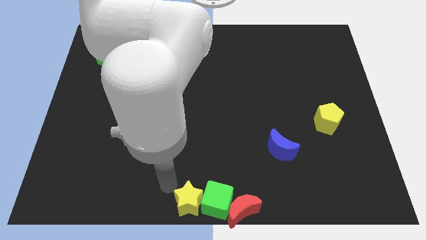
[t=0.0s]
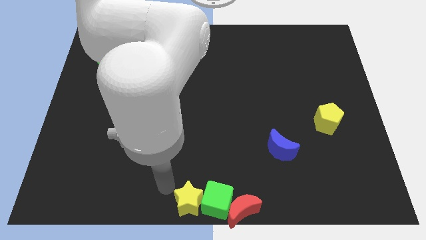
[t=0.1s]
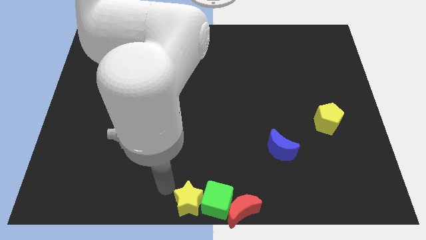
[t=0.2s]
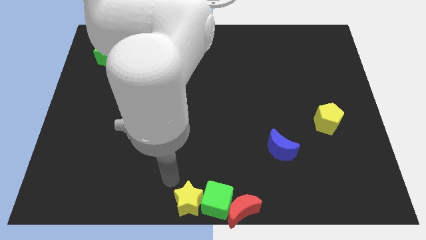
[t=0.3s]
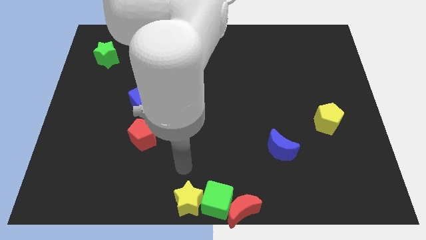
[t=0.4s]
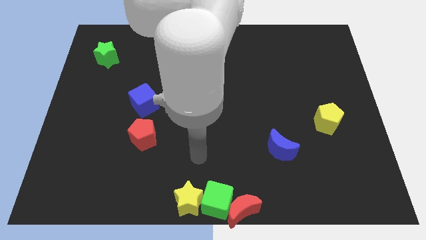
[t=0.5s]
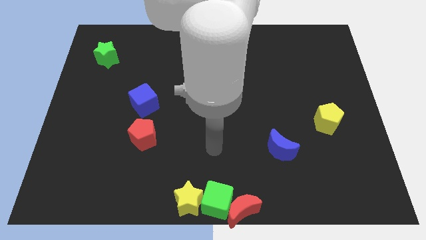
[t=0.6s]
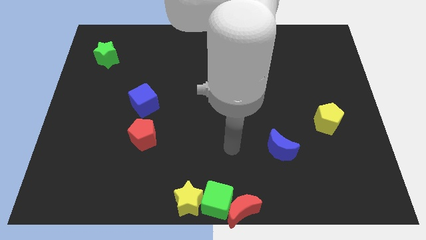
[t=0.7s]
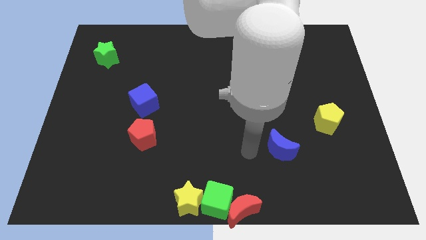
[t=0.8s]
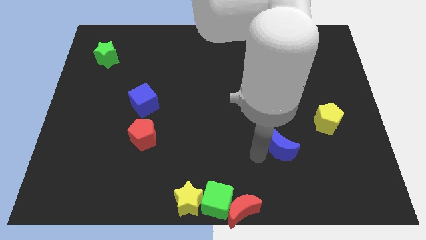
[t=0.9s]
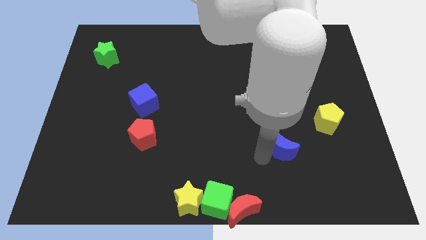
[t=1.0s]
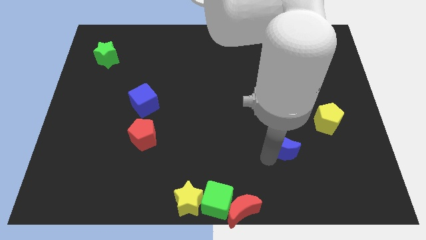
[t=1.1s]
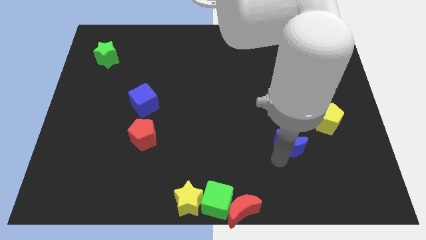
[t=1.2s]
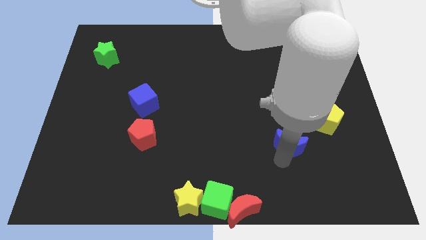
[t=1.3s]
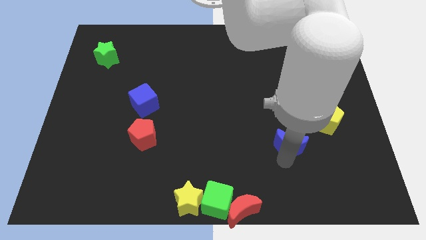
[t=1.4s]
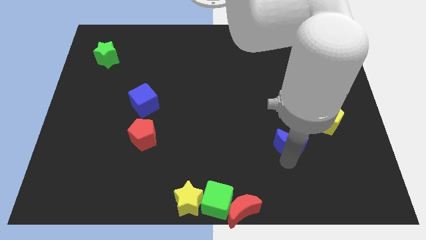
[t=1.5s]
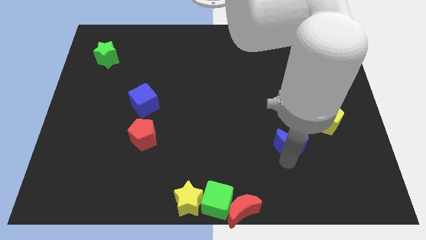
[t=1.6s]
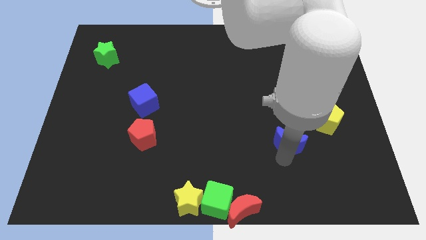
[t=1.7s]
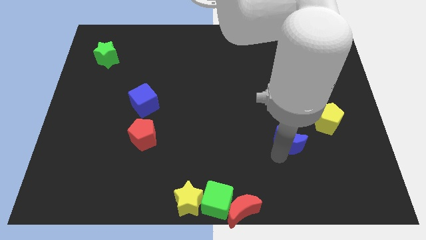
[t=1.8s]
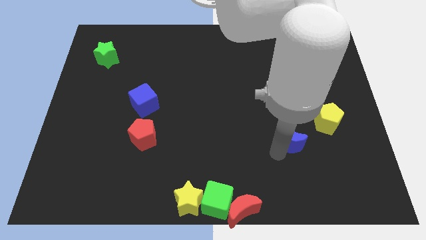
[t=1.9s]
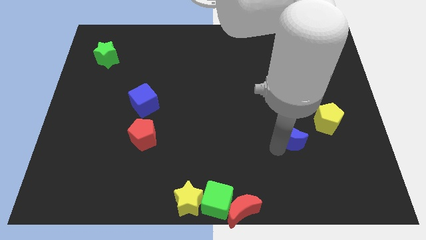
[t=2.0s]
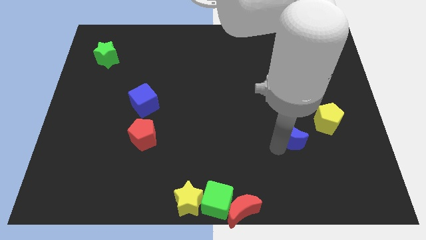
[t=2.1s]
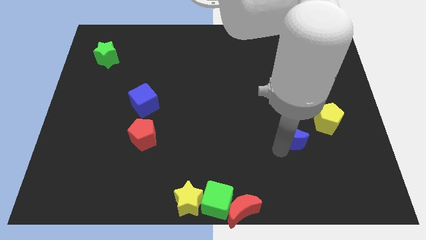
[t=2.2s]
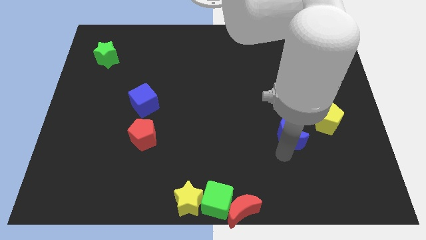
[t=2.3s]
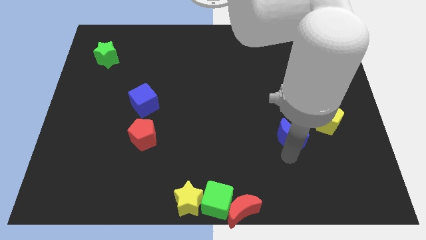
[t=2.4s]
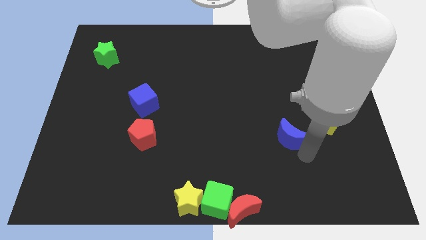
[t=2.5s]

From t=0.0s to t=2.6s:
push blue moon upwards a bit

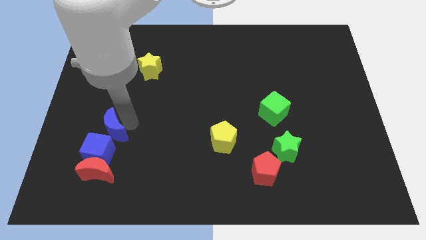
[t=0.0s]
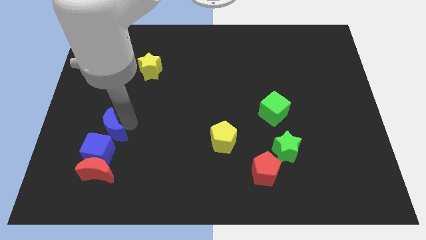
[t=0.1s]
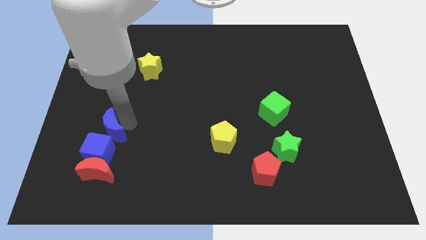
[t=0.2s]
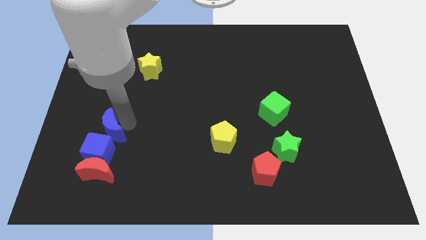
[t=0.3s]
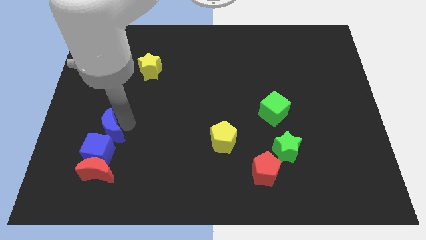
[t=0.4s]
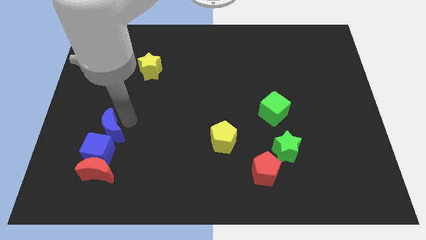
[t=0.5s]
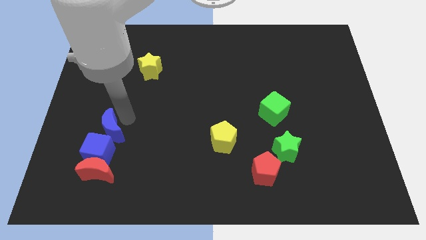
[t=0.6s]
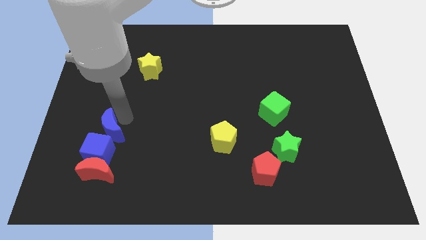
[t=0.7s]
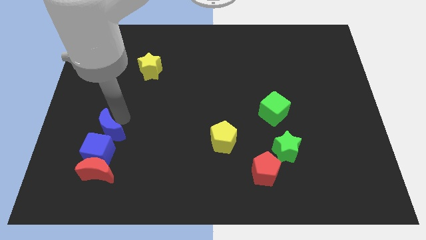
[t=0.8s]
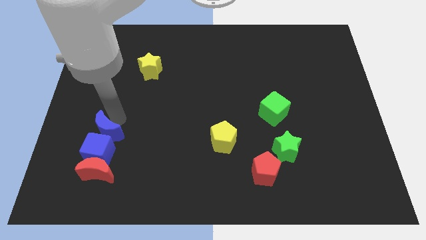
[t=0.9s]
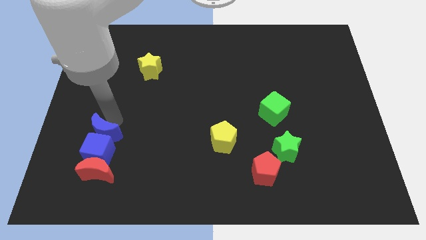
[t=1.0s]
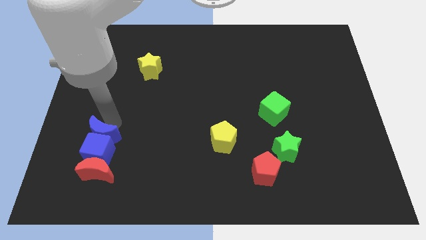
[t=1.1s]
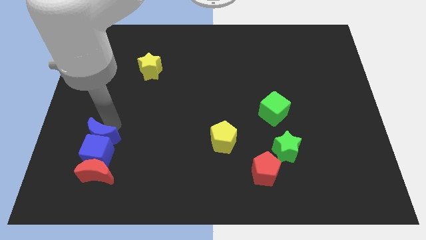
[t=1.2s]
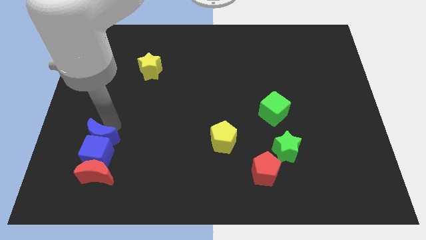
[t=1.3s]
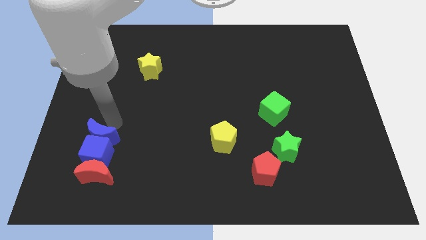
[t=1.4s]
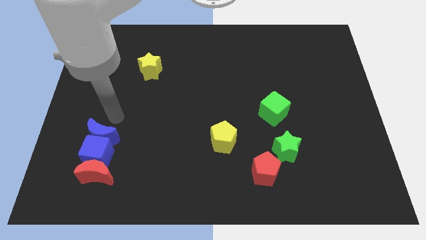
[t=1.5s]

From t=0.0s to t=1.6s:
place the blue crescent to the top of the blue cube

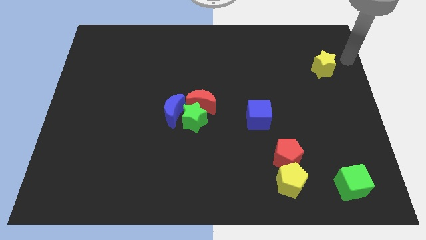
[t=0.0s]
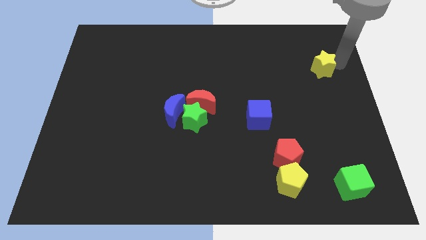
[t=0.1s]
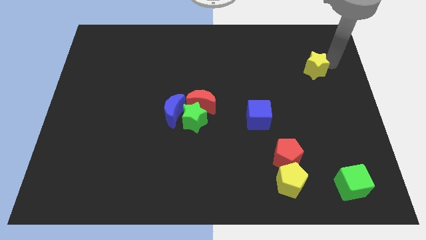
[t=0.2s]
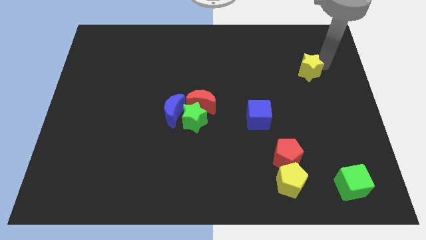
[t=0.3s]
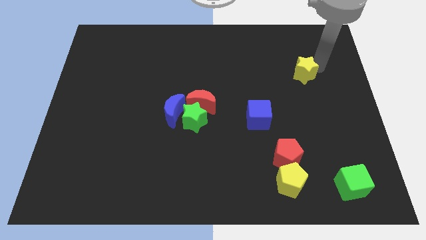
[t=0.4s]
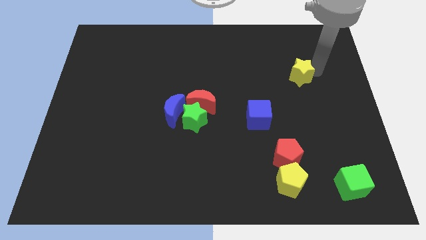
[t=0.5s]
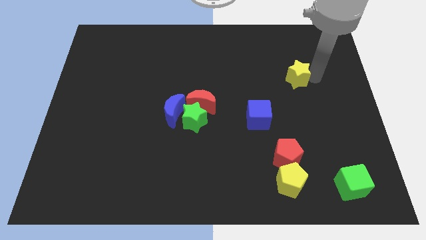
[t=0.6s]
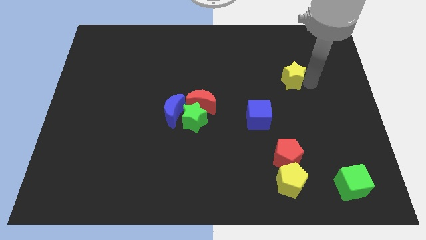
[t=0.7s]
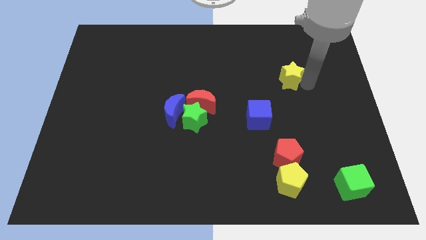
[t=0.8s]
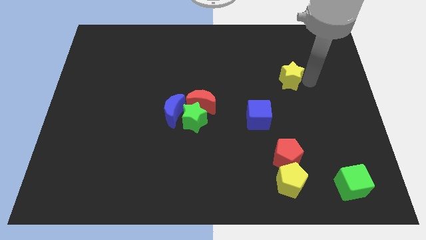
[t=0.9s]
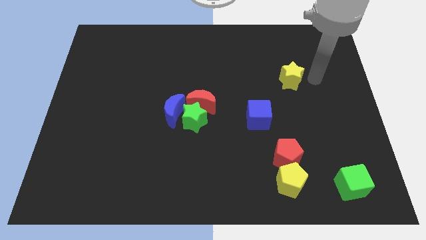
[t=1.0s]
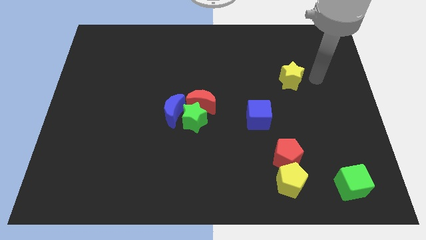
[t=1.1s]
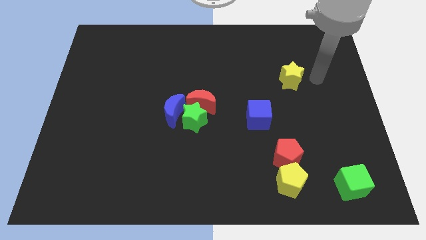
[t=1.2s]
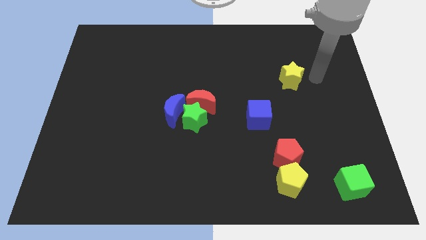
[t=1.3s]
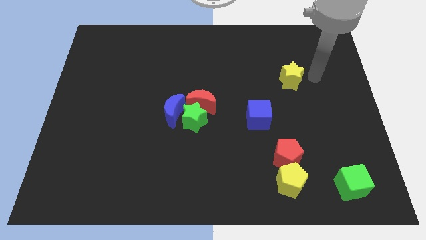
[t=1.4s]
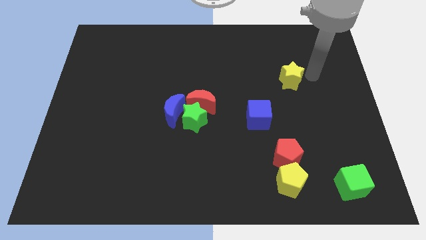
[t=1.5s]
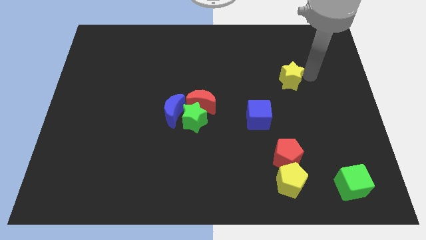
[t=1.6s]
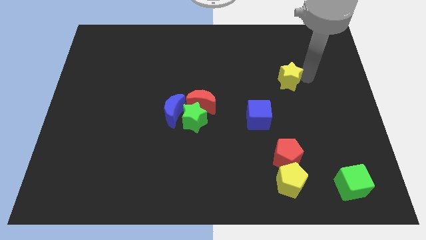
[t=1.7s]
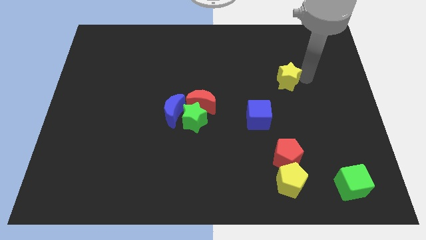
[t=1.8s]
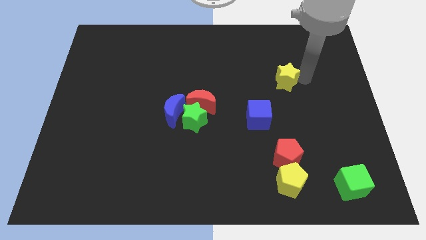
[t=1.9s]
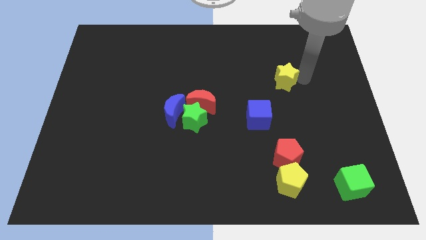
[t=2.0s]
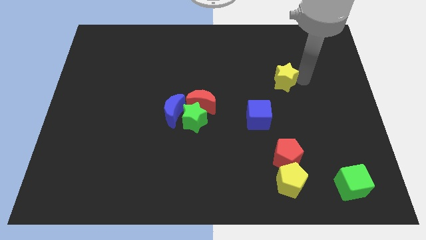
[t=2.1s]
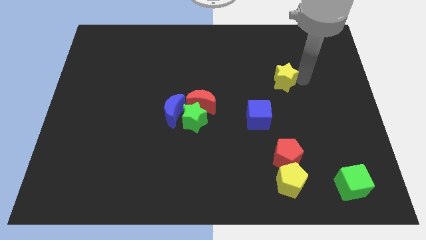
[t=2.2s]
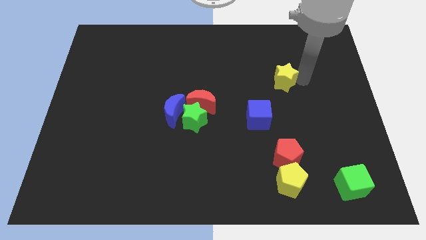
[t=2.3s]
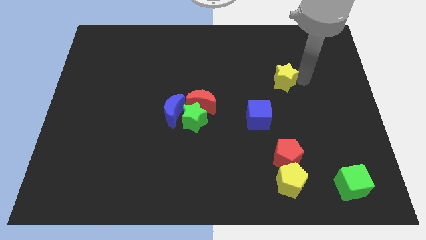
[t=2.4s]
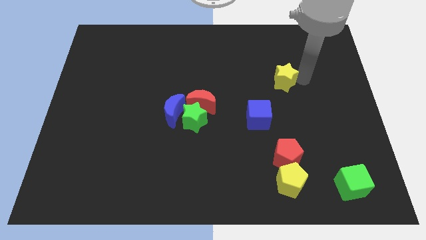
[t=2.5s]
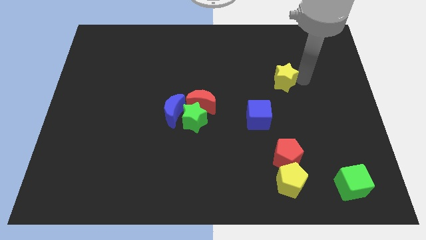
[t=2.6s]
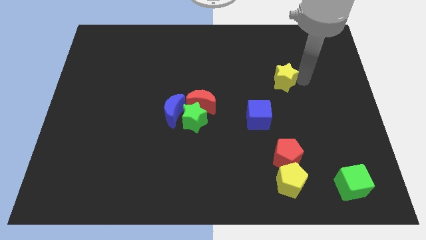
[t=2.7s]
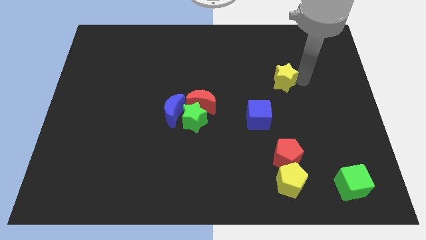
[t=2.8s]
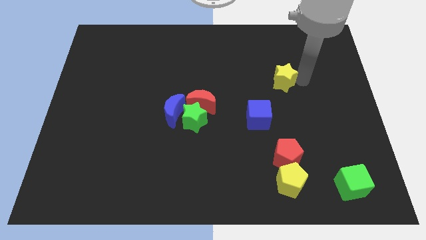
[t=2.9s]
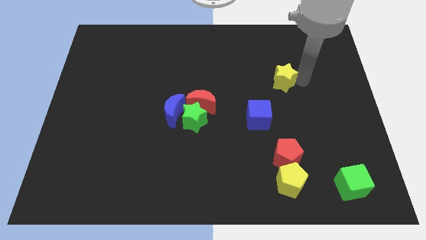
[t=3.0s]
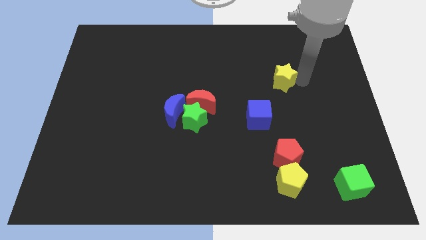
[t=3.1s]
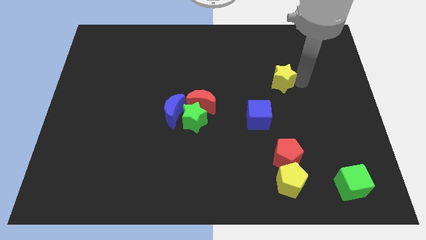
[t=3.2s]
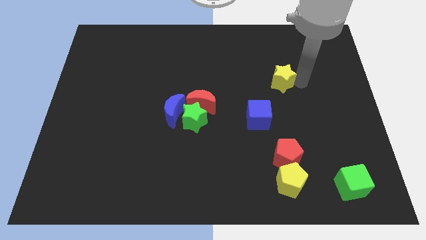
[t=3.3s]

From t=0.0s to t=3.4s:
put the yellow star vertically above the red pentagon

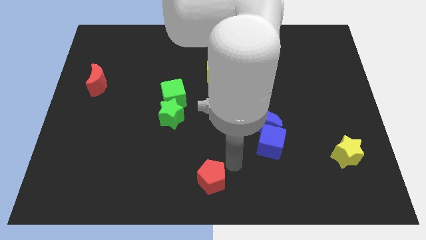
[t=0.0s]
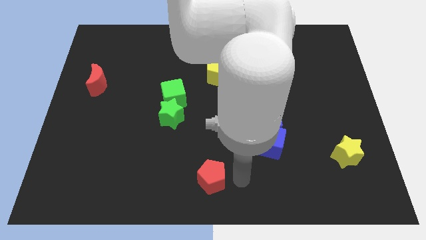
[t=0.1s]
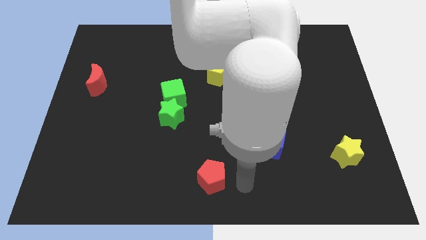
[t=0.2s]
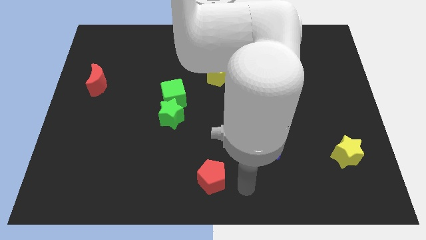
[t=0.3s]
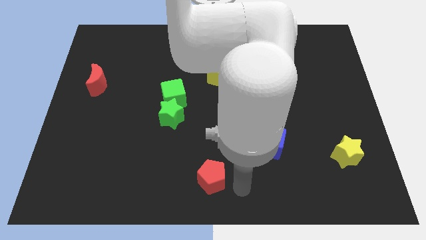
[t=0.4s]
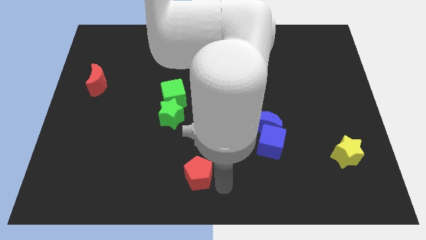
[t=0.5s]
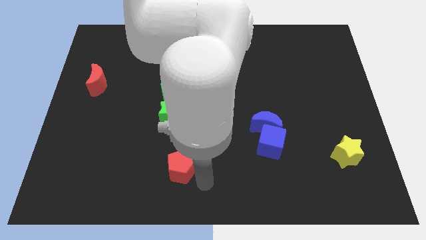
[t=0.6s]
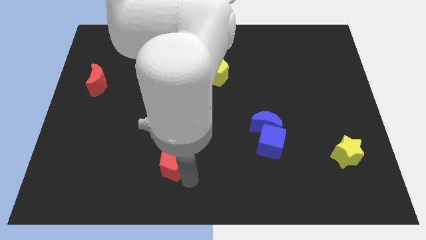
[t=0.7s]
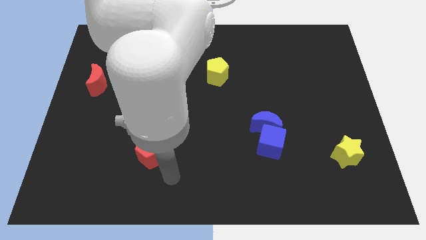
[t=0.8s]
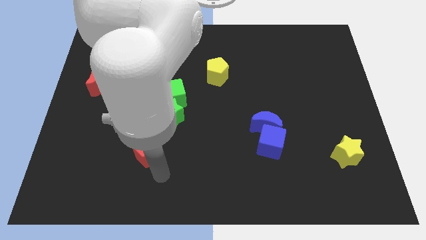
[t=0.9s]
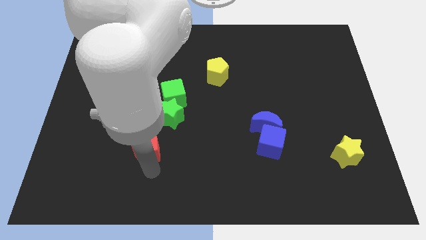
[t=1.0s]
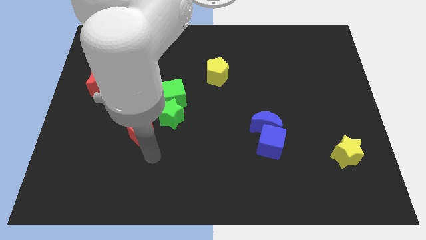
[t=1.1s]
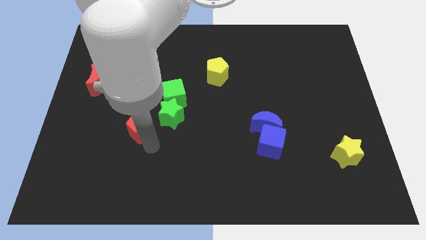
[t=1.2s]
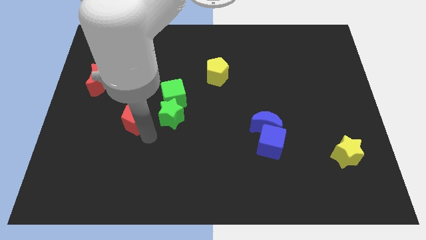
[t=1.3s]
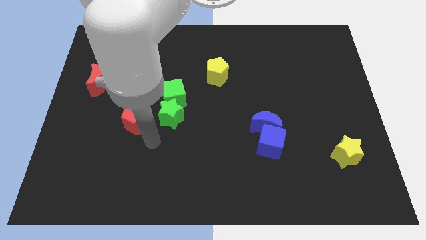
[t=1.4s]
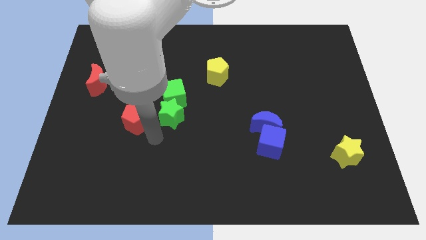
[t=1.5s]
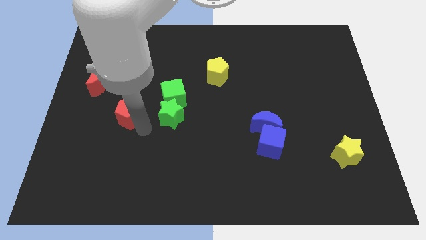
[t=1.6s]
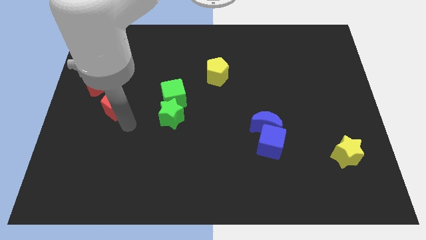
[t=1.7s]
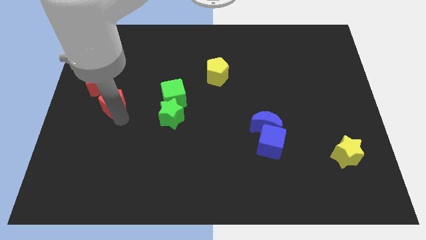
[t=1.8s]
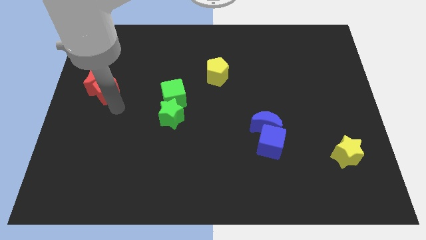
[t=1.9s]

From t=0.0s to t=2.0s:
push the red pentagon towards the red crescent
